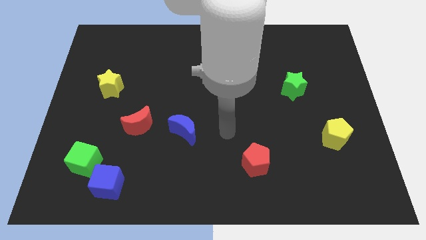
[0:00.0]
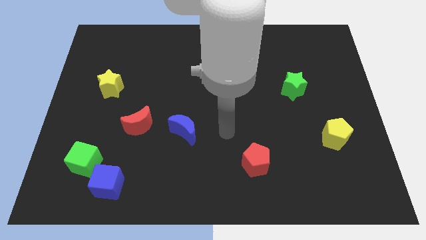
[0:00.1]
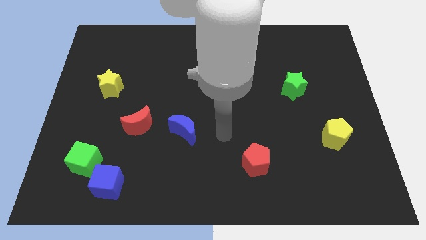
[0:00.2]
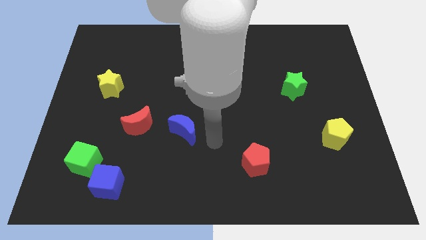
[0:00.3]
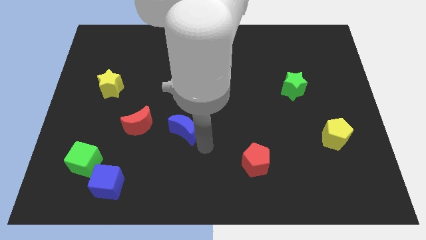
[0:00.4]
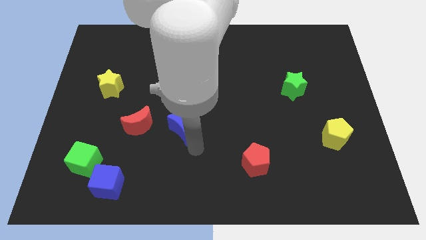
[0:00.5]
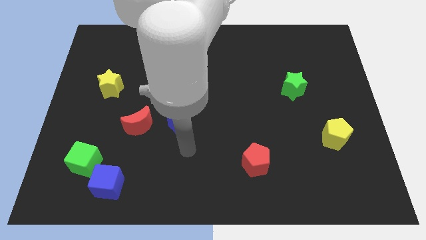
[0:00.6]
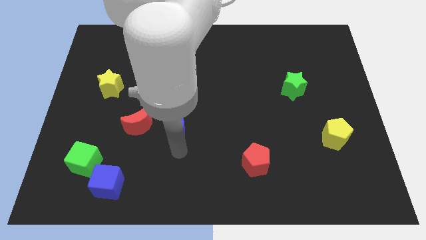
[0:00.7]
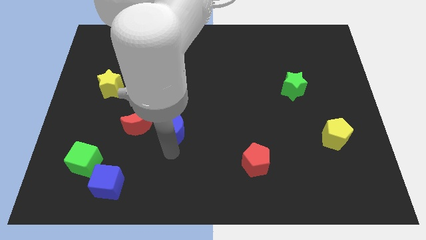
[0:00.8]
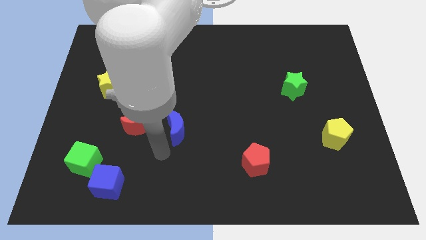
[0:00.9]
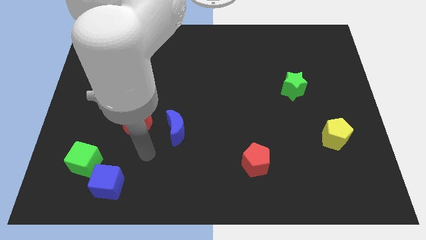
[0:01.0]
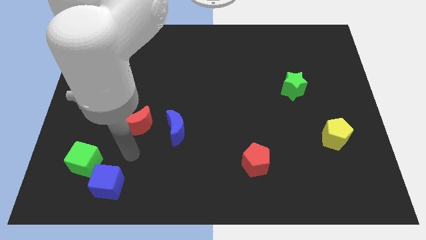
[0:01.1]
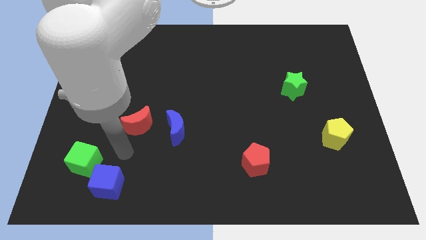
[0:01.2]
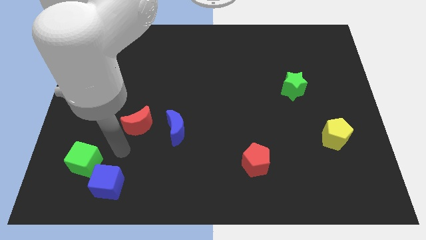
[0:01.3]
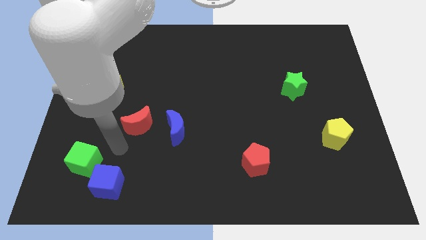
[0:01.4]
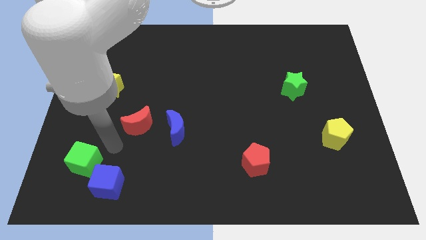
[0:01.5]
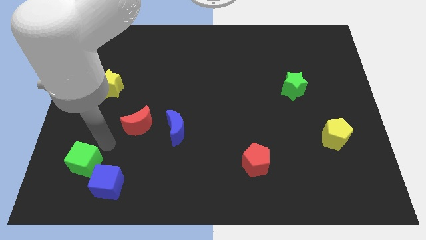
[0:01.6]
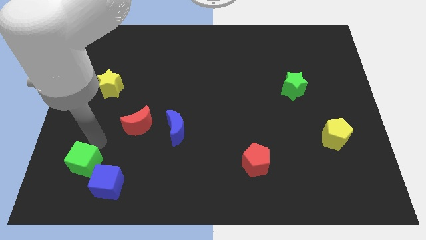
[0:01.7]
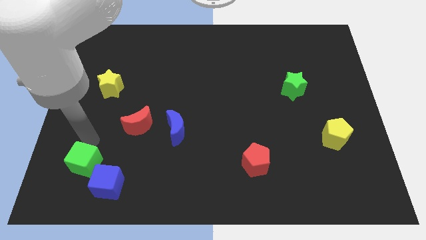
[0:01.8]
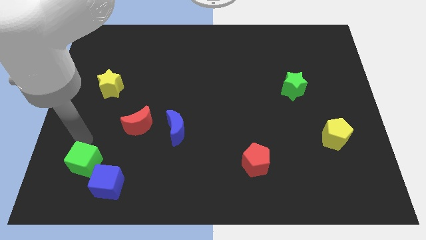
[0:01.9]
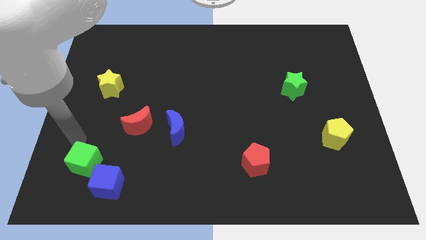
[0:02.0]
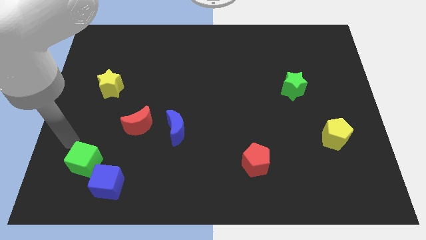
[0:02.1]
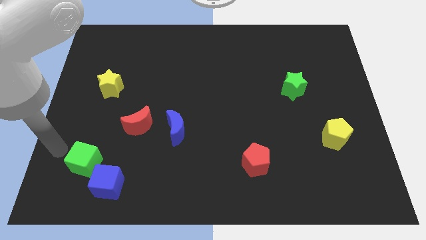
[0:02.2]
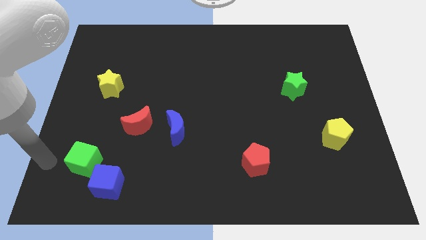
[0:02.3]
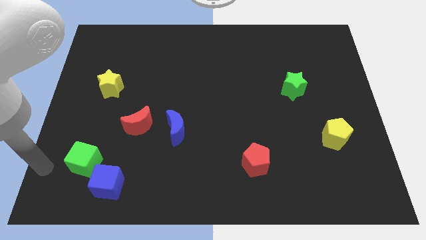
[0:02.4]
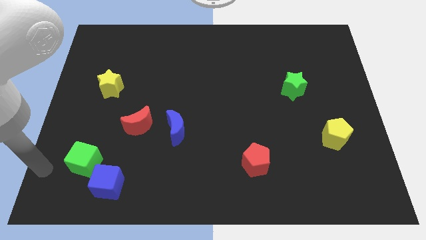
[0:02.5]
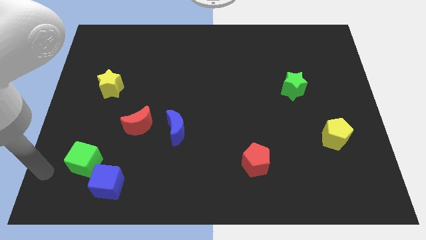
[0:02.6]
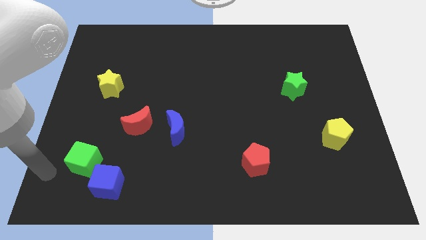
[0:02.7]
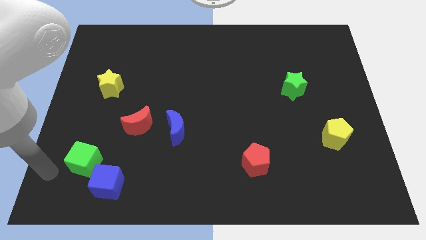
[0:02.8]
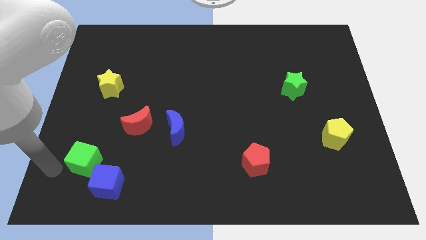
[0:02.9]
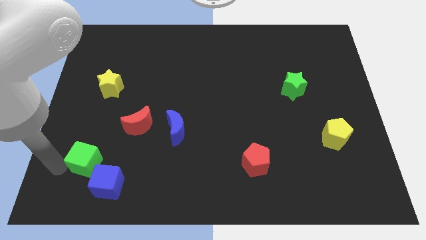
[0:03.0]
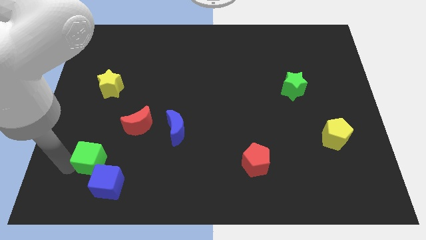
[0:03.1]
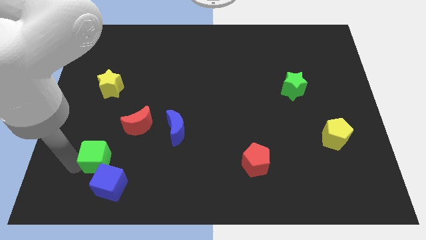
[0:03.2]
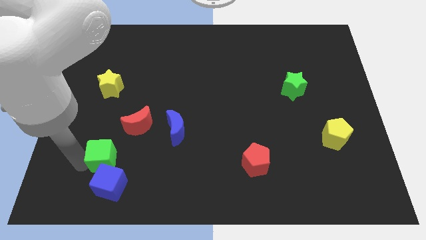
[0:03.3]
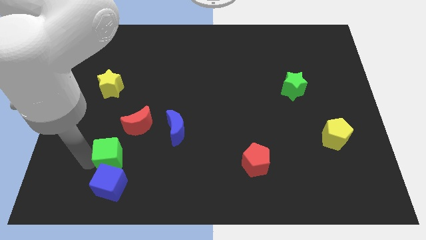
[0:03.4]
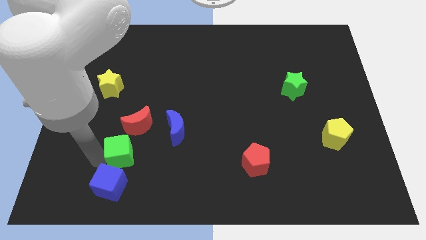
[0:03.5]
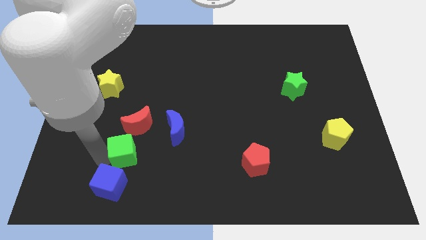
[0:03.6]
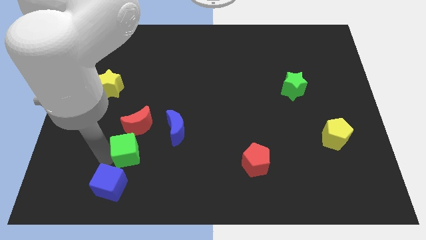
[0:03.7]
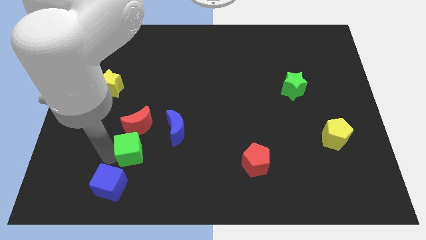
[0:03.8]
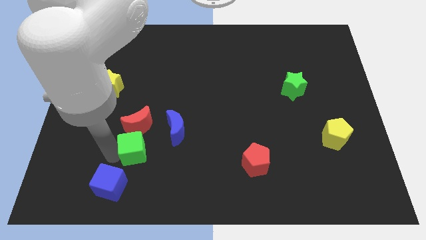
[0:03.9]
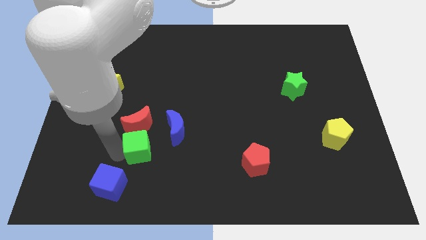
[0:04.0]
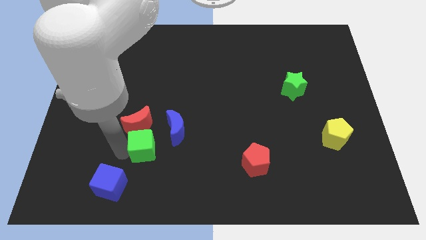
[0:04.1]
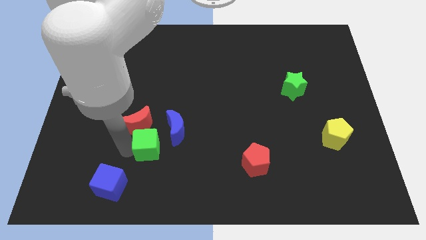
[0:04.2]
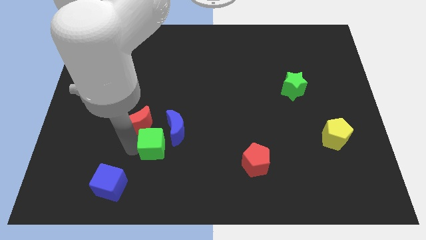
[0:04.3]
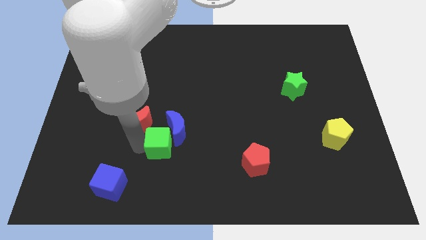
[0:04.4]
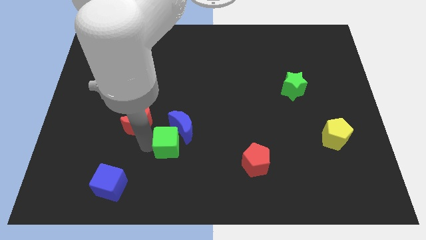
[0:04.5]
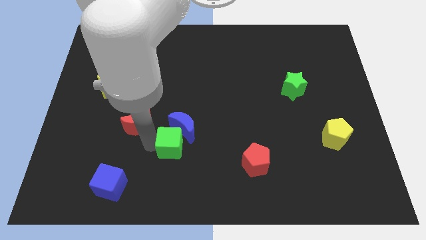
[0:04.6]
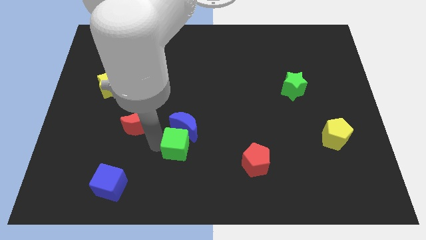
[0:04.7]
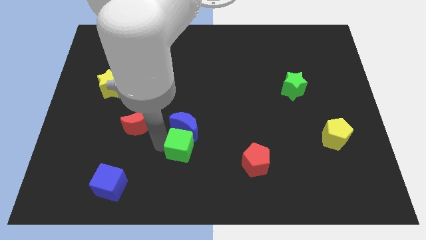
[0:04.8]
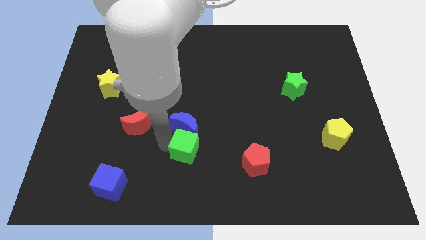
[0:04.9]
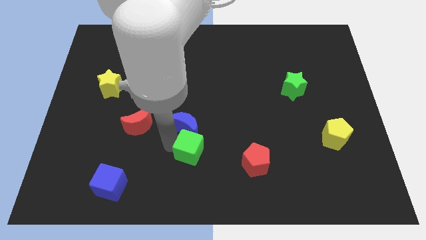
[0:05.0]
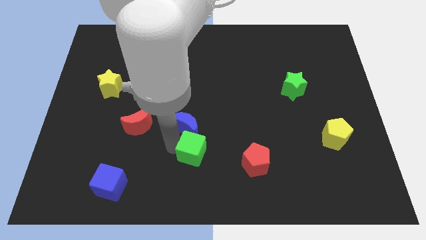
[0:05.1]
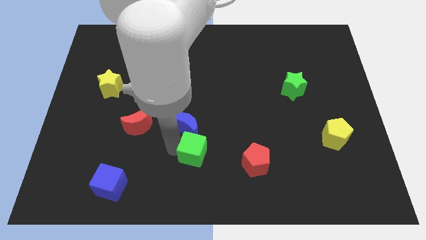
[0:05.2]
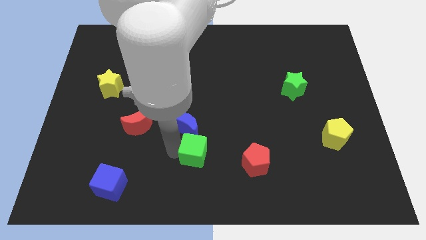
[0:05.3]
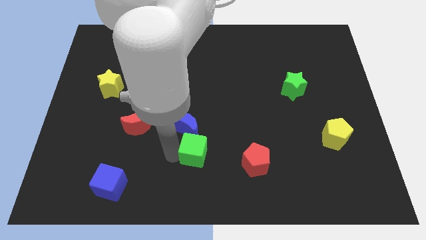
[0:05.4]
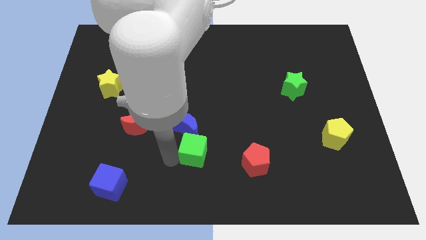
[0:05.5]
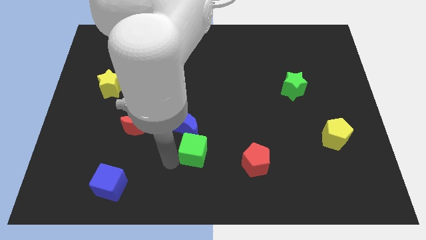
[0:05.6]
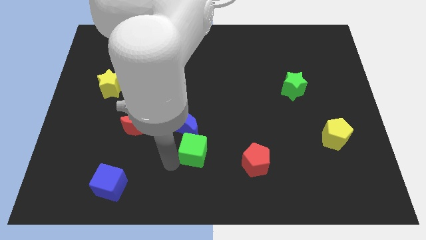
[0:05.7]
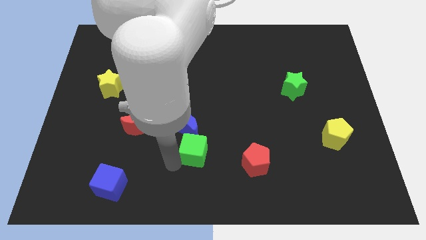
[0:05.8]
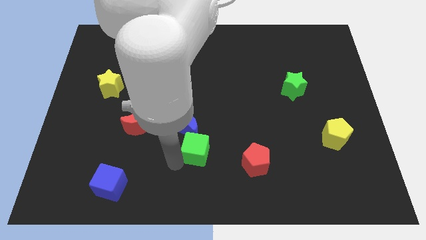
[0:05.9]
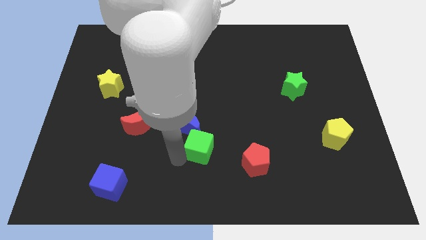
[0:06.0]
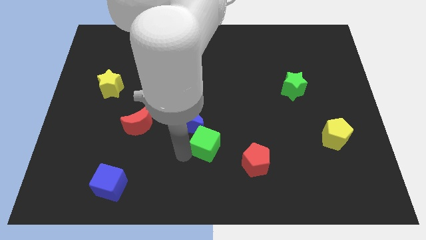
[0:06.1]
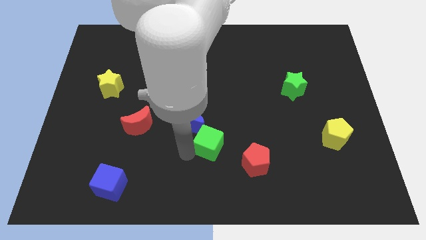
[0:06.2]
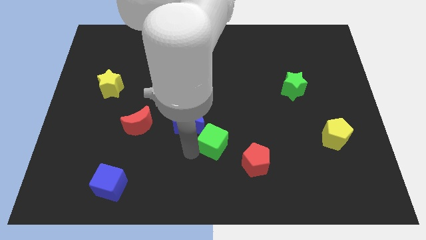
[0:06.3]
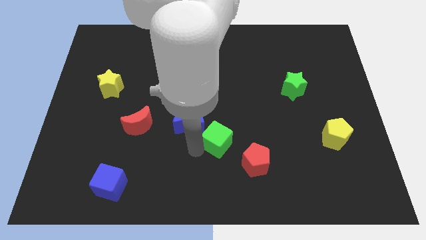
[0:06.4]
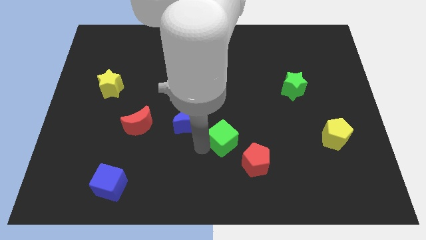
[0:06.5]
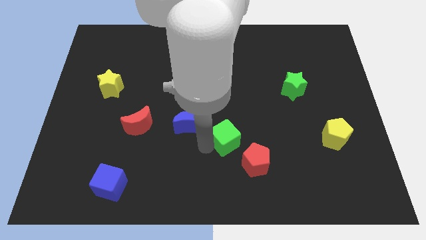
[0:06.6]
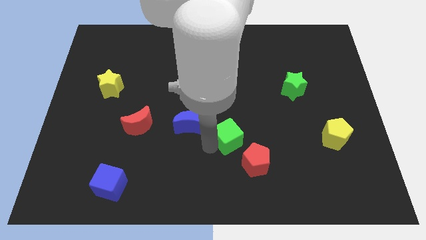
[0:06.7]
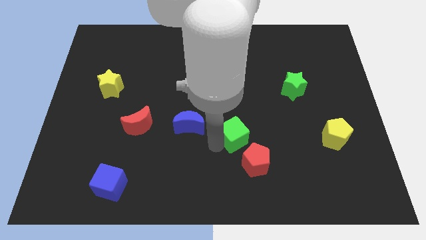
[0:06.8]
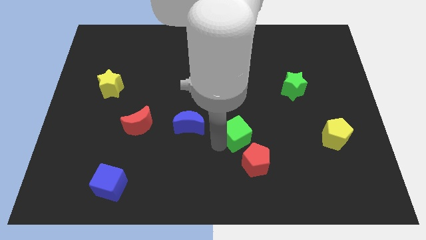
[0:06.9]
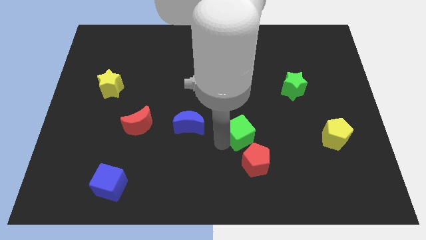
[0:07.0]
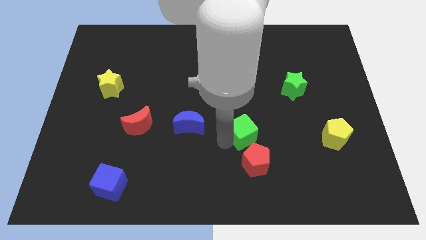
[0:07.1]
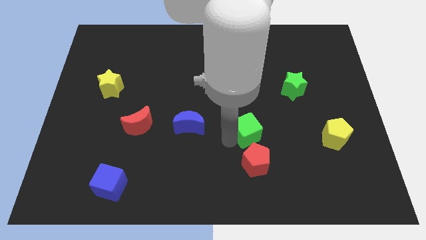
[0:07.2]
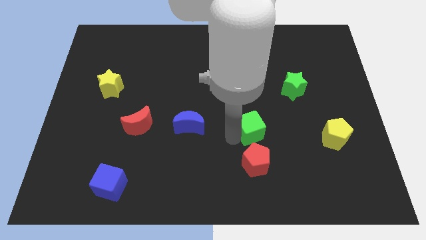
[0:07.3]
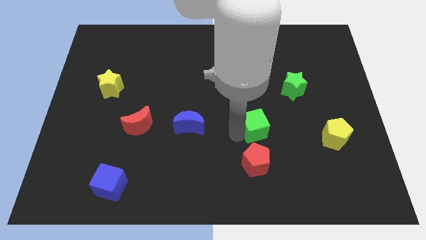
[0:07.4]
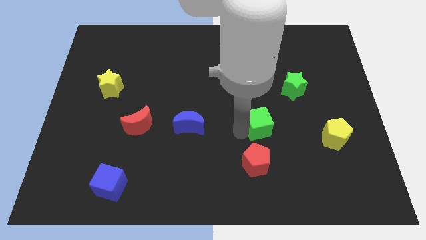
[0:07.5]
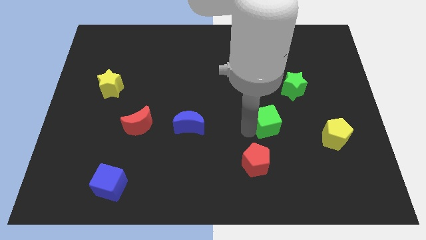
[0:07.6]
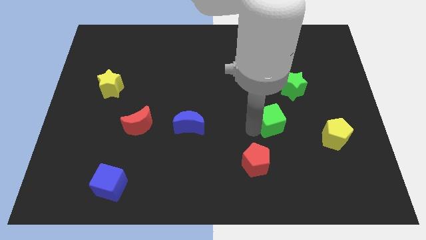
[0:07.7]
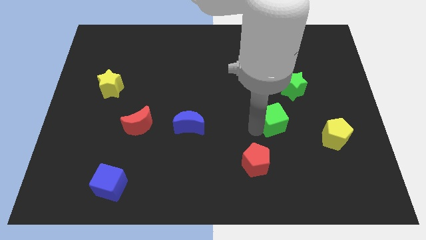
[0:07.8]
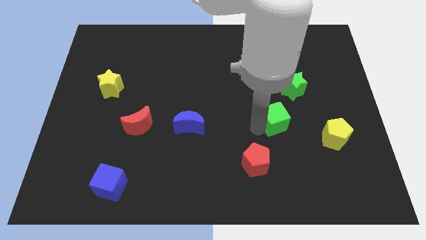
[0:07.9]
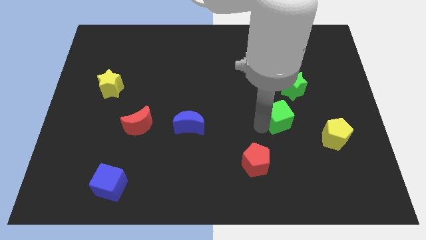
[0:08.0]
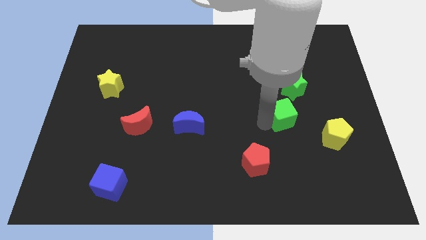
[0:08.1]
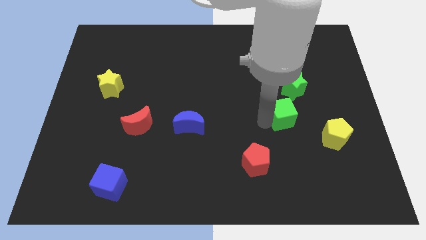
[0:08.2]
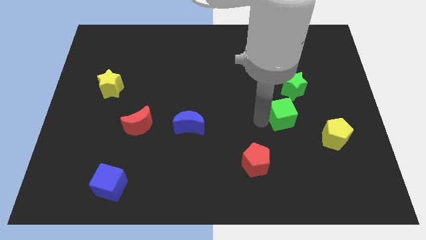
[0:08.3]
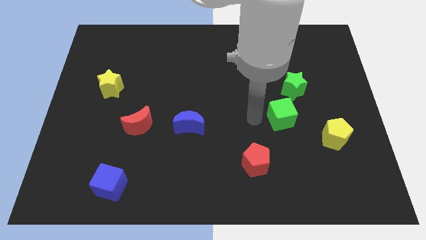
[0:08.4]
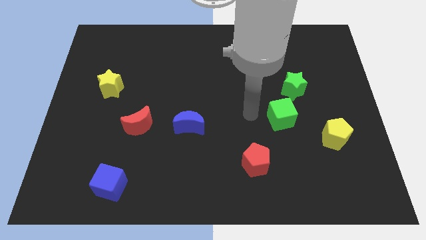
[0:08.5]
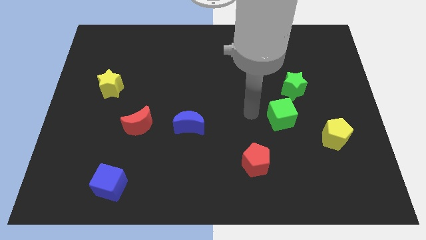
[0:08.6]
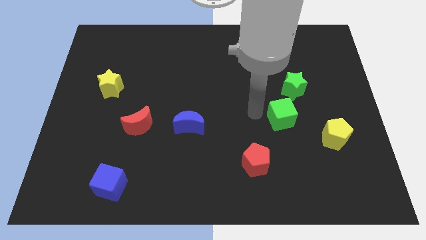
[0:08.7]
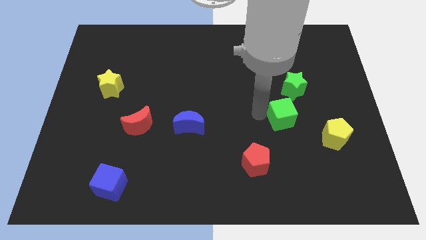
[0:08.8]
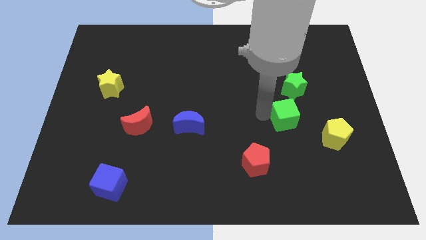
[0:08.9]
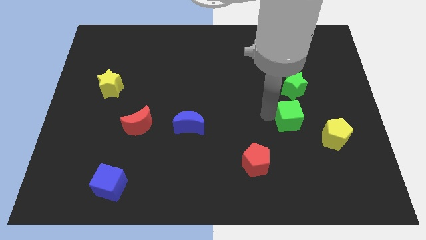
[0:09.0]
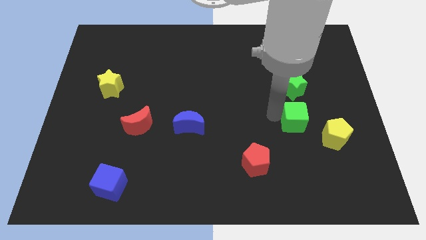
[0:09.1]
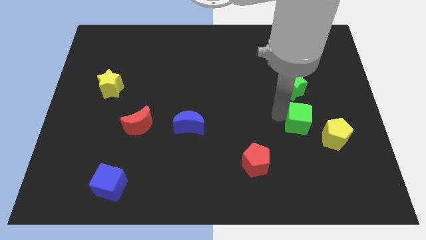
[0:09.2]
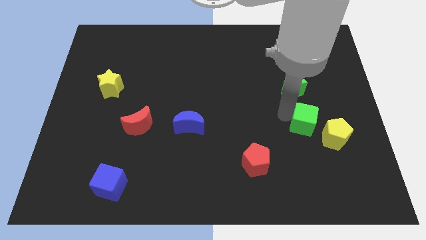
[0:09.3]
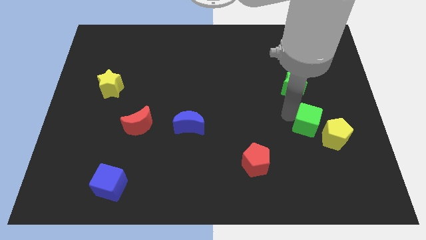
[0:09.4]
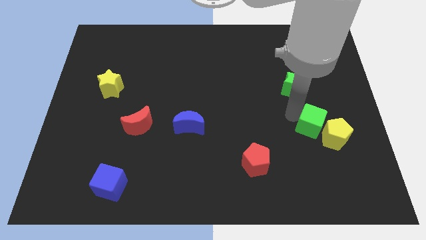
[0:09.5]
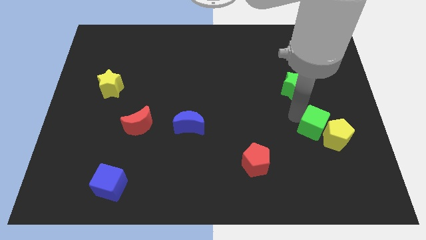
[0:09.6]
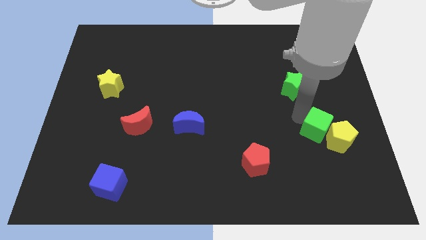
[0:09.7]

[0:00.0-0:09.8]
push the green cube next to the yellow pentagon
